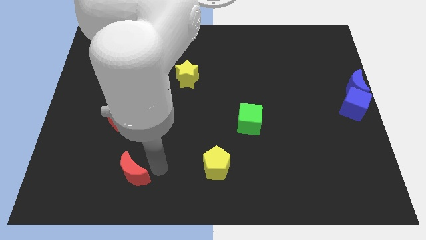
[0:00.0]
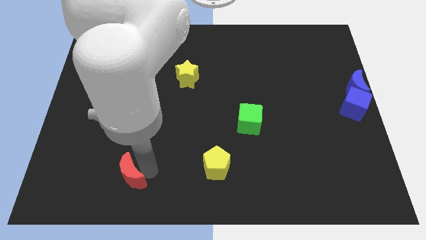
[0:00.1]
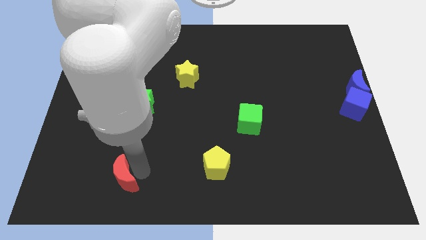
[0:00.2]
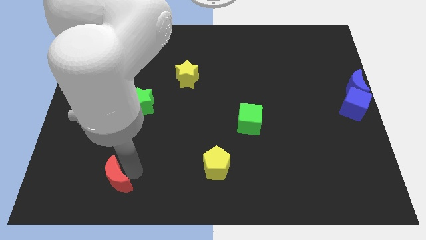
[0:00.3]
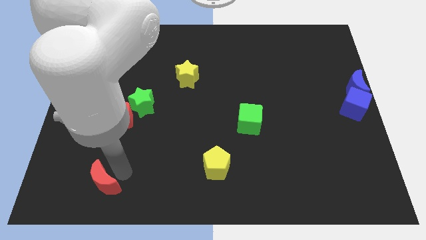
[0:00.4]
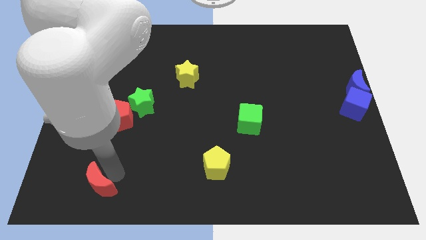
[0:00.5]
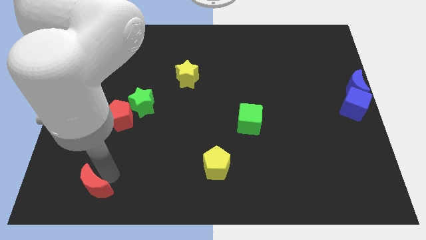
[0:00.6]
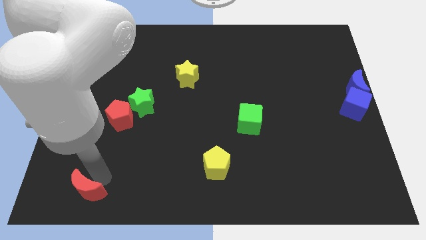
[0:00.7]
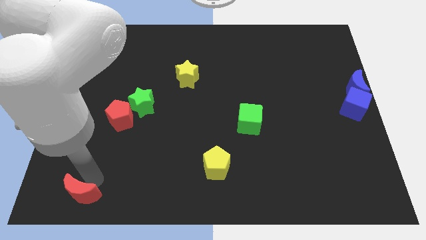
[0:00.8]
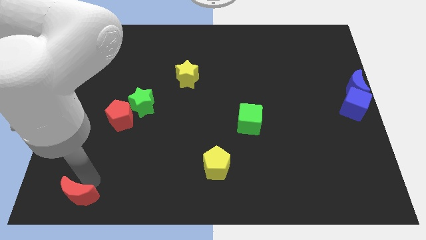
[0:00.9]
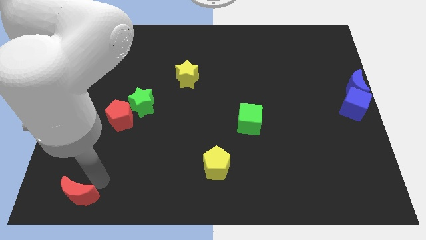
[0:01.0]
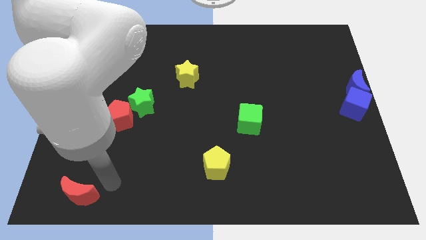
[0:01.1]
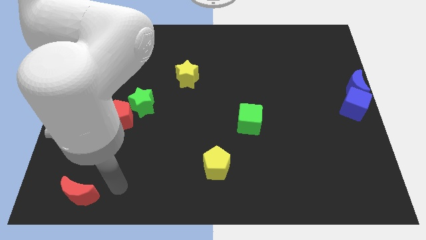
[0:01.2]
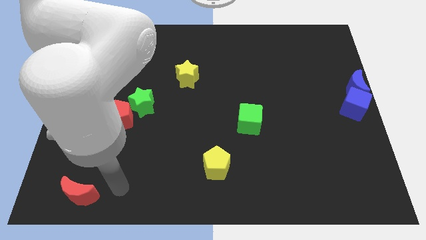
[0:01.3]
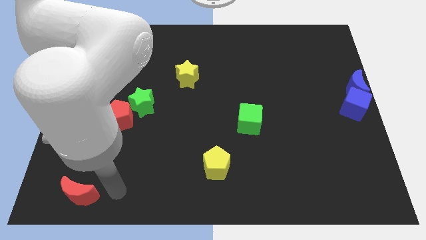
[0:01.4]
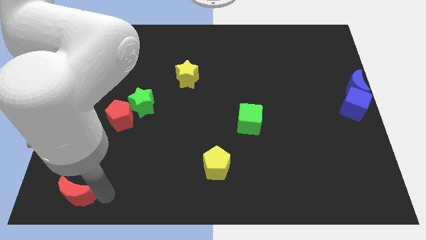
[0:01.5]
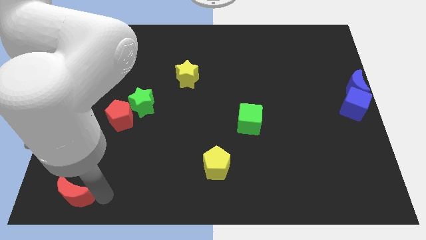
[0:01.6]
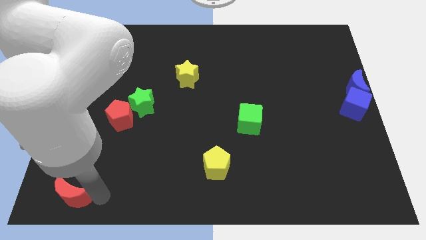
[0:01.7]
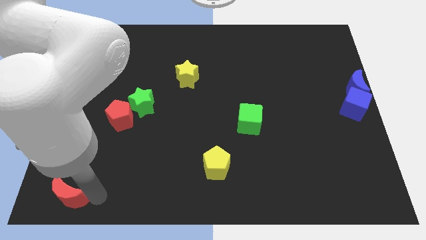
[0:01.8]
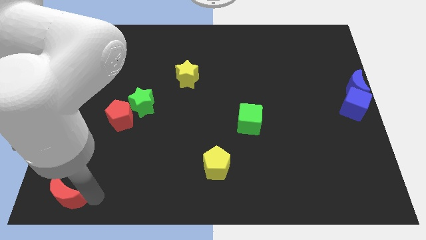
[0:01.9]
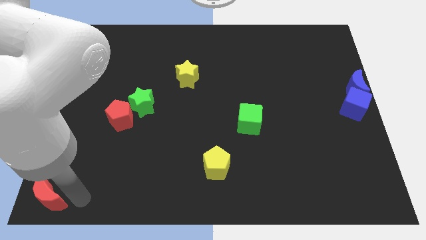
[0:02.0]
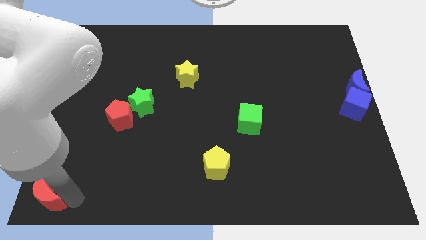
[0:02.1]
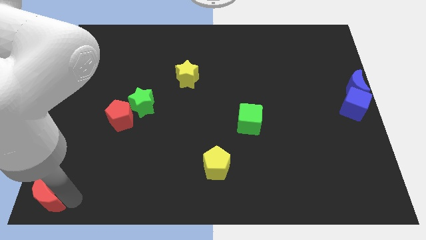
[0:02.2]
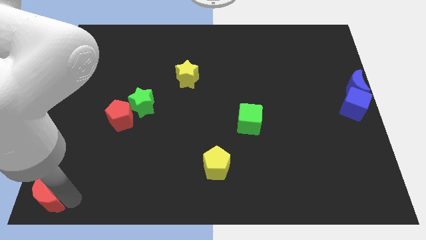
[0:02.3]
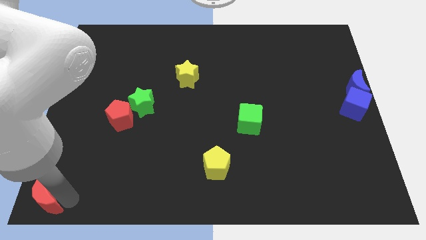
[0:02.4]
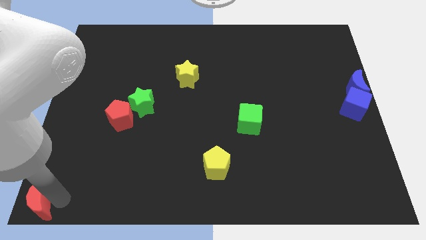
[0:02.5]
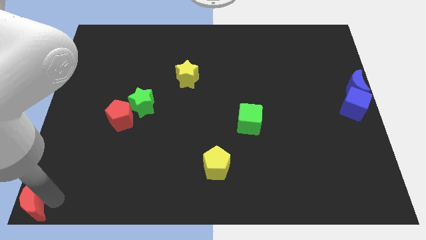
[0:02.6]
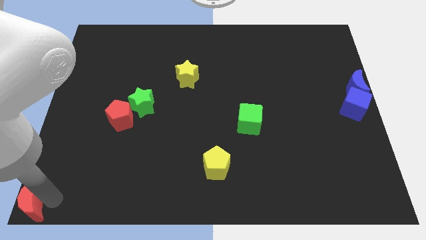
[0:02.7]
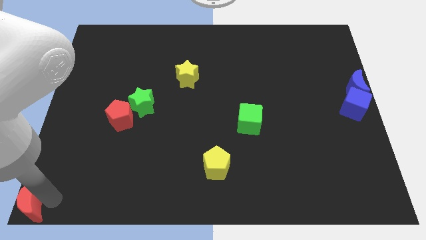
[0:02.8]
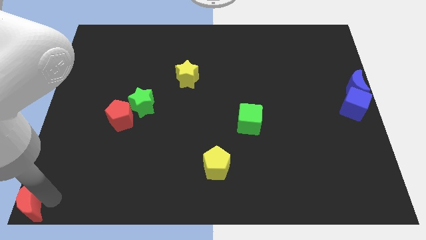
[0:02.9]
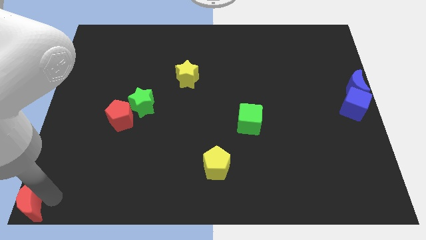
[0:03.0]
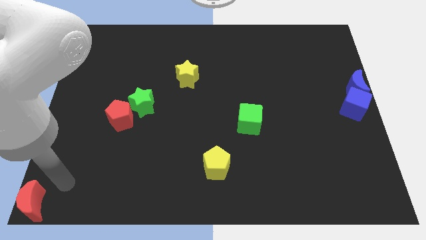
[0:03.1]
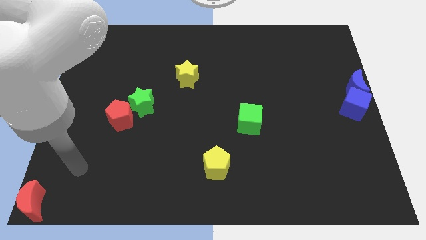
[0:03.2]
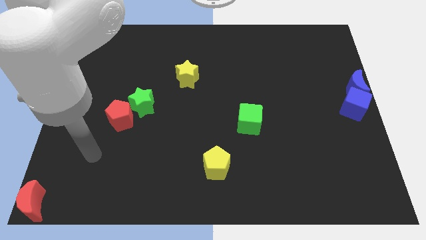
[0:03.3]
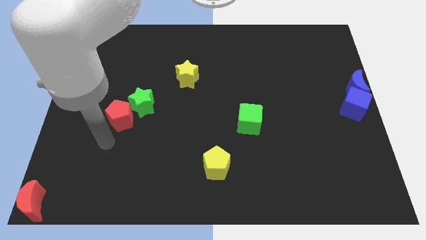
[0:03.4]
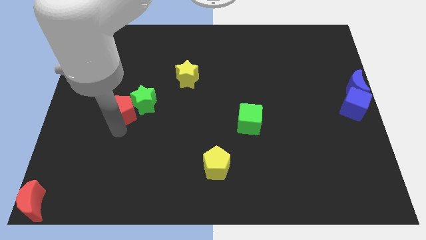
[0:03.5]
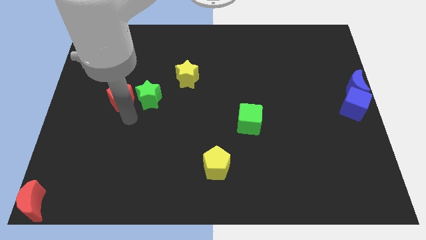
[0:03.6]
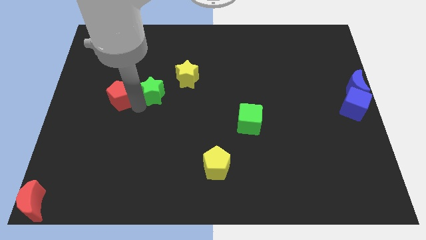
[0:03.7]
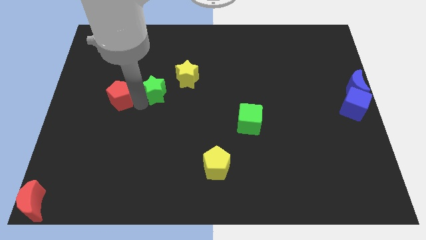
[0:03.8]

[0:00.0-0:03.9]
point your arm between green star and red pentagon

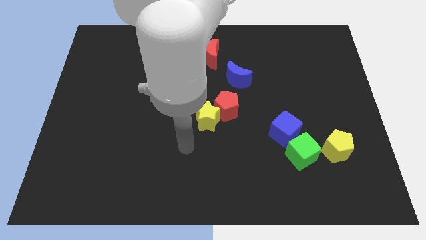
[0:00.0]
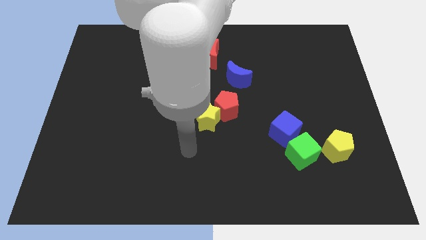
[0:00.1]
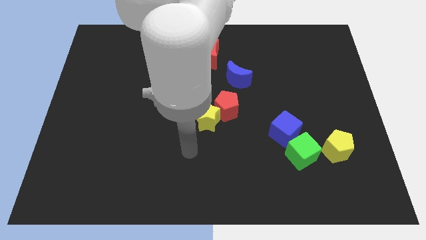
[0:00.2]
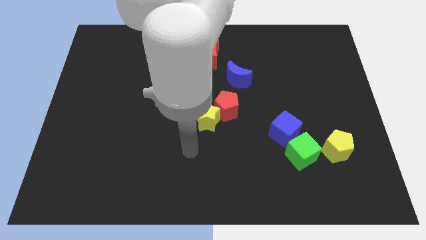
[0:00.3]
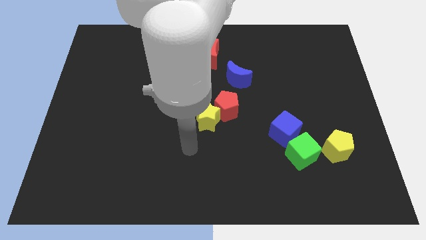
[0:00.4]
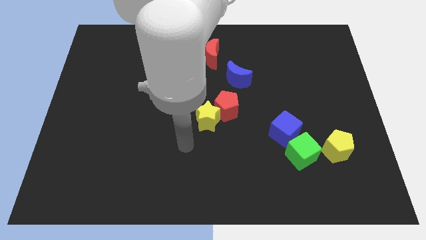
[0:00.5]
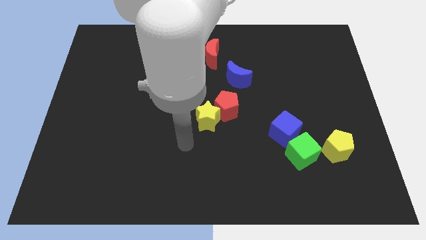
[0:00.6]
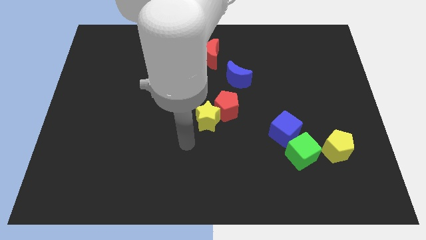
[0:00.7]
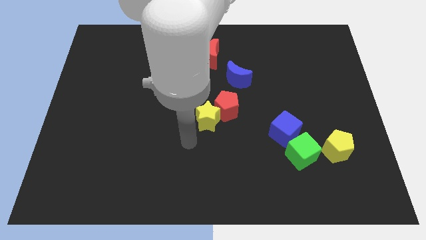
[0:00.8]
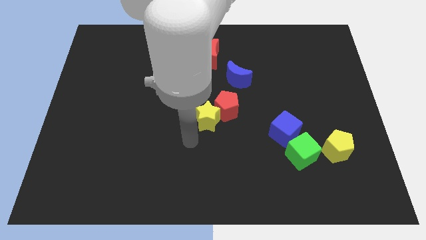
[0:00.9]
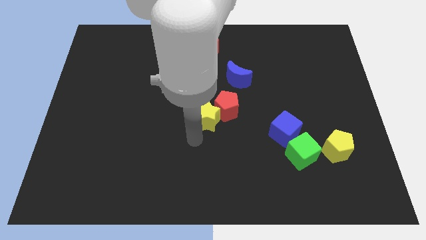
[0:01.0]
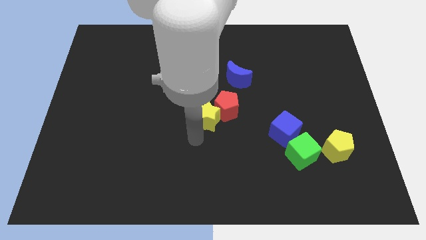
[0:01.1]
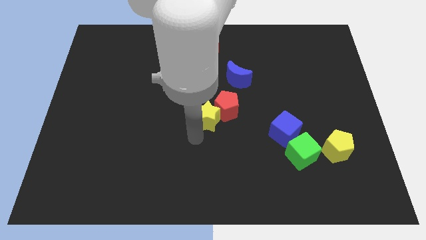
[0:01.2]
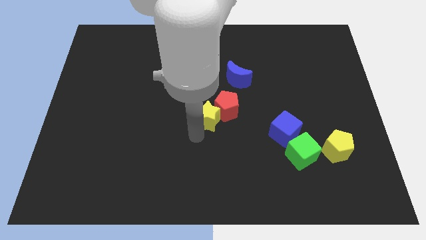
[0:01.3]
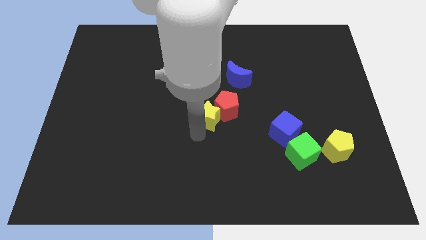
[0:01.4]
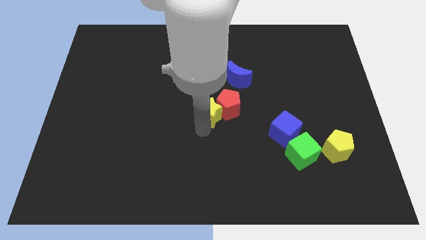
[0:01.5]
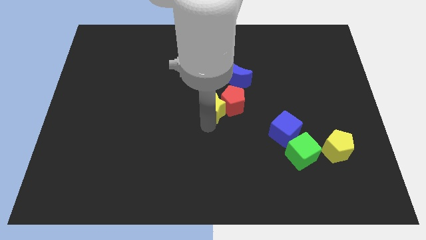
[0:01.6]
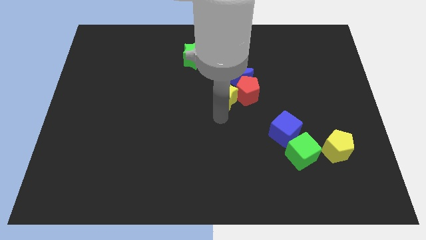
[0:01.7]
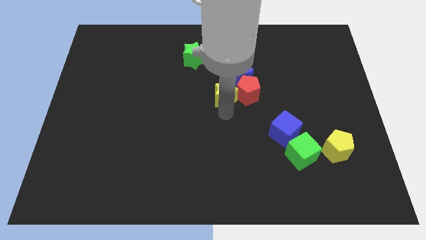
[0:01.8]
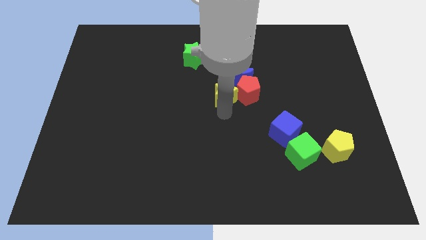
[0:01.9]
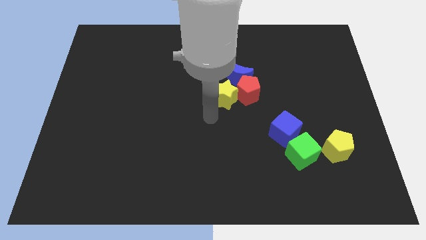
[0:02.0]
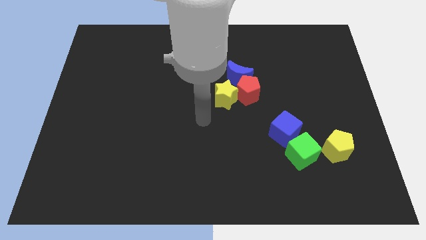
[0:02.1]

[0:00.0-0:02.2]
push yellow star and red pentagon to the center

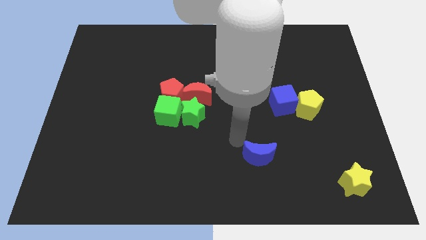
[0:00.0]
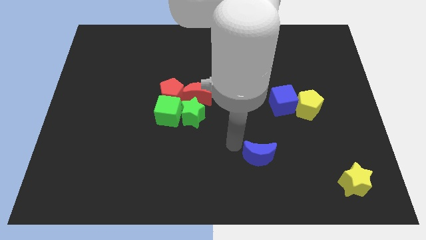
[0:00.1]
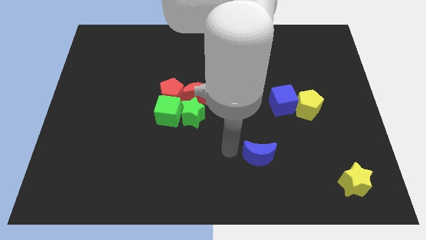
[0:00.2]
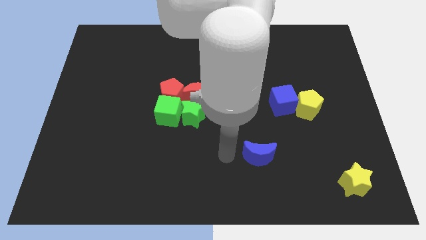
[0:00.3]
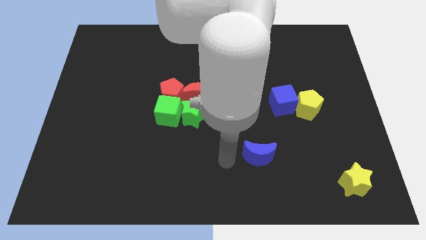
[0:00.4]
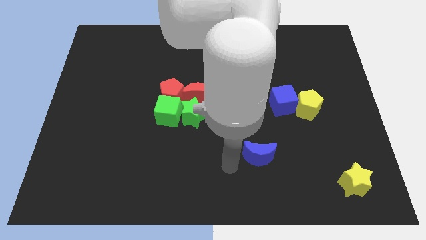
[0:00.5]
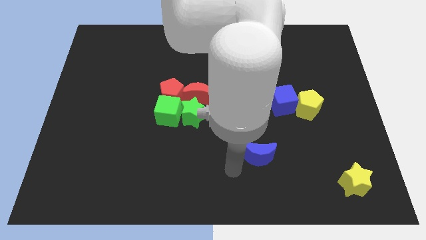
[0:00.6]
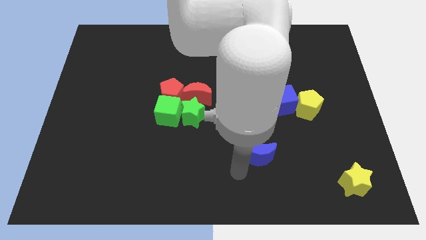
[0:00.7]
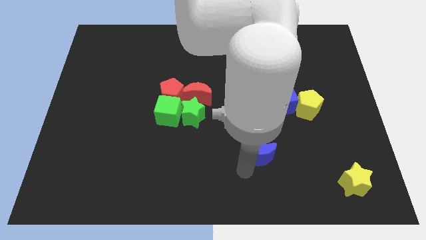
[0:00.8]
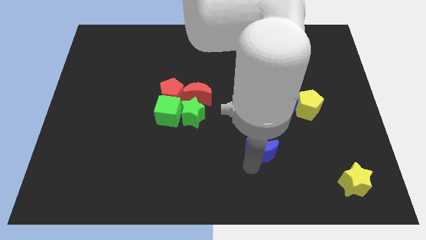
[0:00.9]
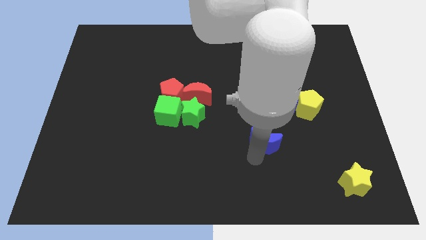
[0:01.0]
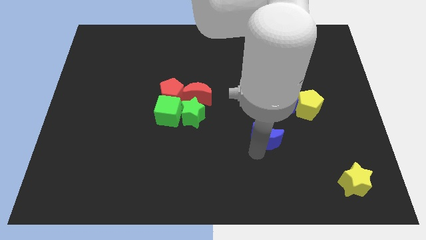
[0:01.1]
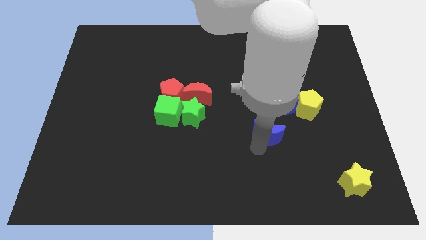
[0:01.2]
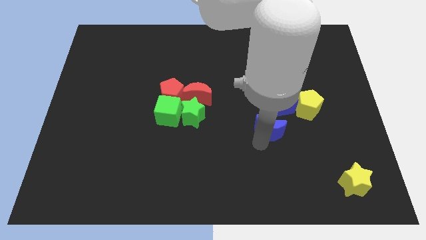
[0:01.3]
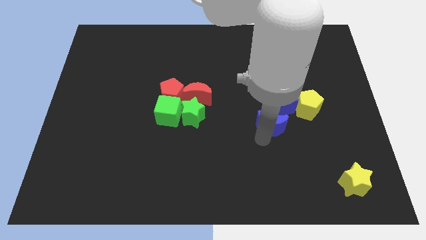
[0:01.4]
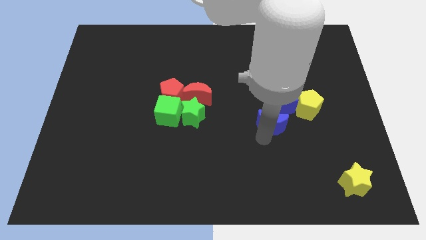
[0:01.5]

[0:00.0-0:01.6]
move blue crescent towards blue cube

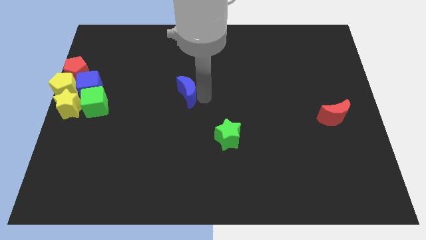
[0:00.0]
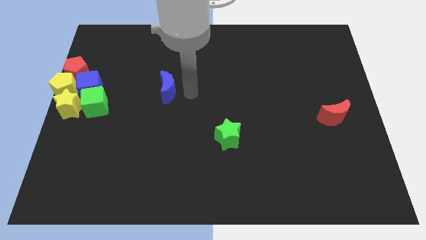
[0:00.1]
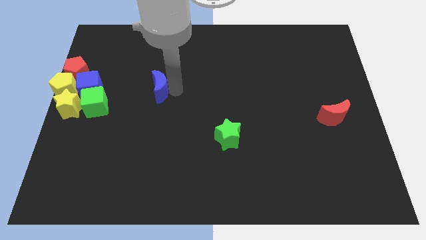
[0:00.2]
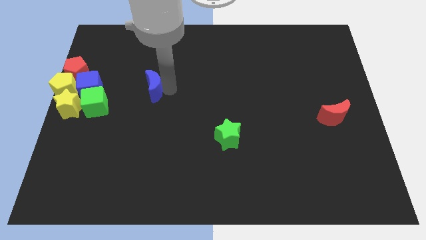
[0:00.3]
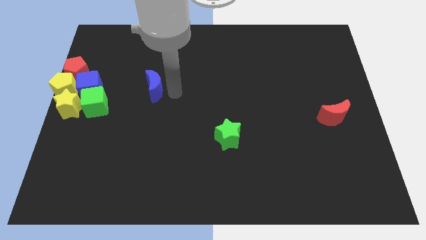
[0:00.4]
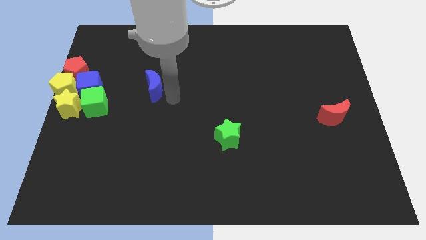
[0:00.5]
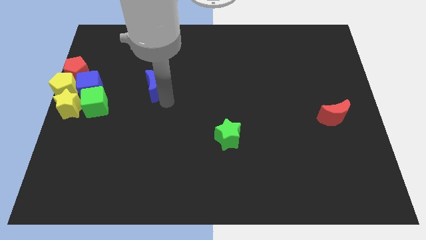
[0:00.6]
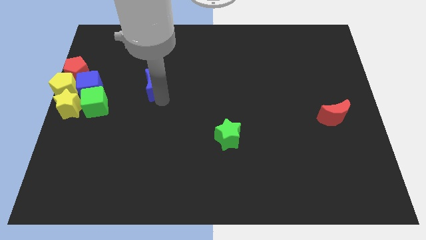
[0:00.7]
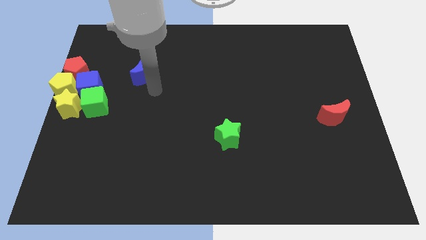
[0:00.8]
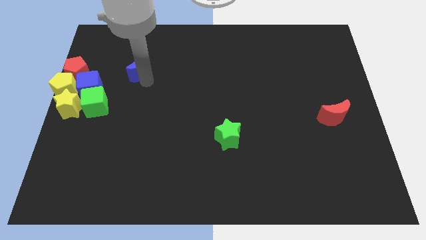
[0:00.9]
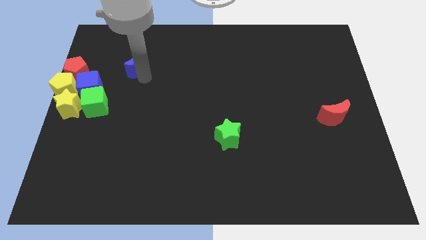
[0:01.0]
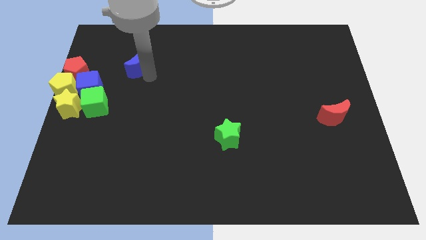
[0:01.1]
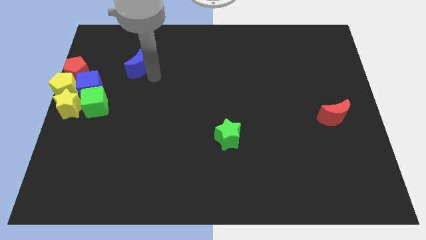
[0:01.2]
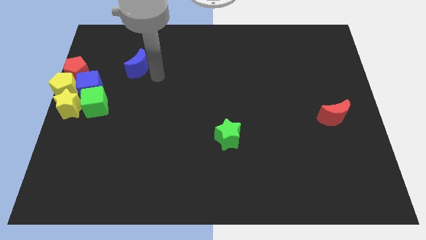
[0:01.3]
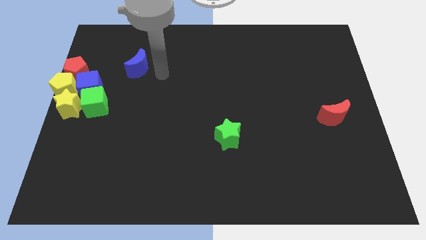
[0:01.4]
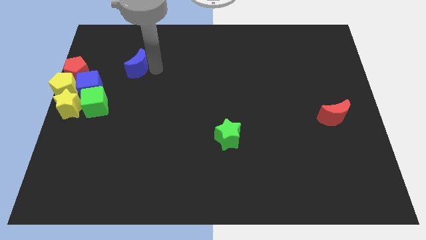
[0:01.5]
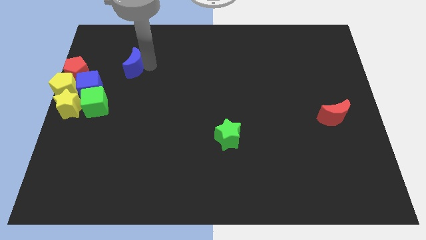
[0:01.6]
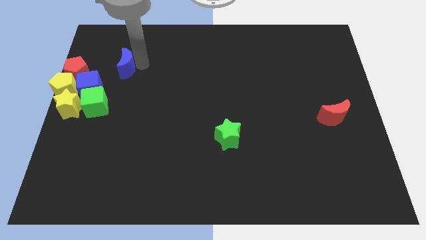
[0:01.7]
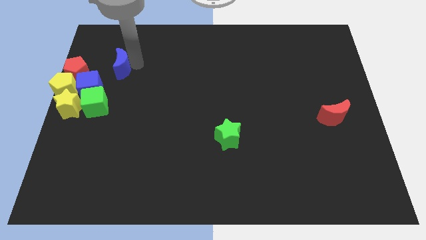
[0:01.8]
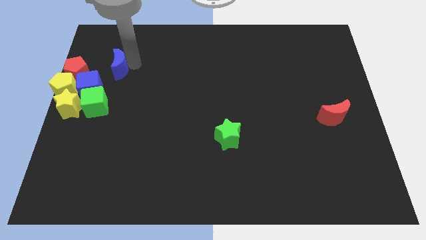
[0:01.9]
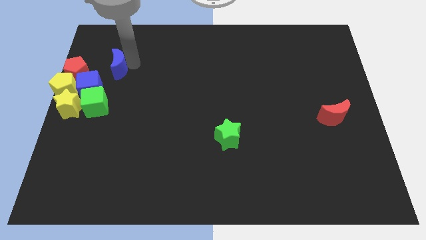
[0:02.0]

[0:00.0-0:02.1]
slightly move the blue crescent
